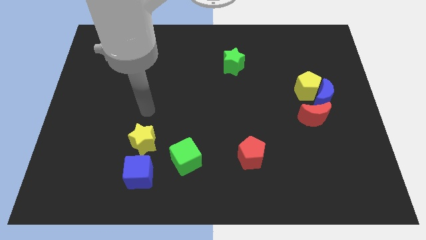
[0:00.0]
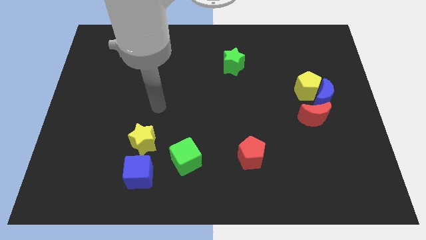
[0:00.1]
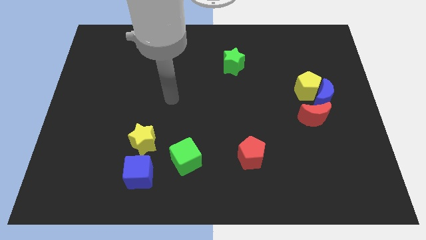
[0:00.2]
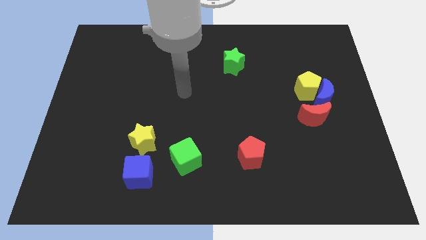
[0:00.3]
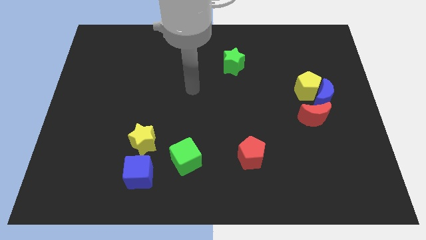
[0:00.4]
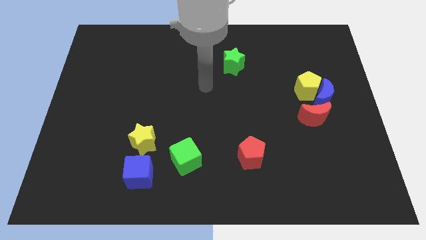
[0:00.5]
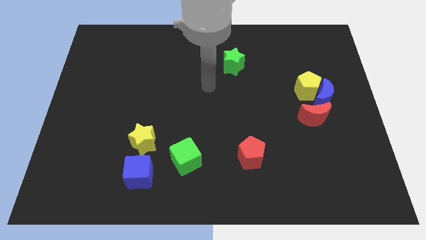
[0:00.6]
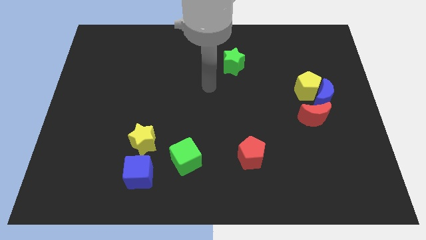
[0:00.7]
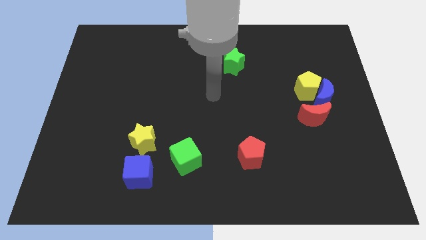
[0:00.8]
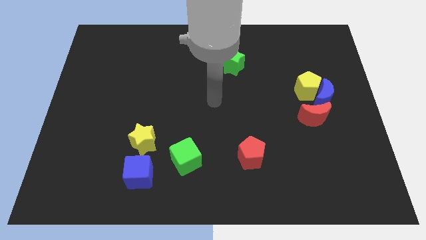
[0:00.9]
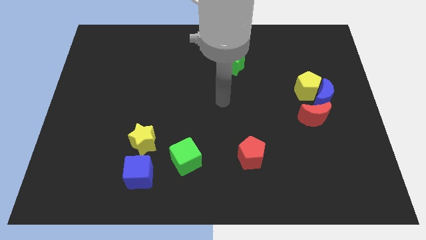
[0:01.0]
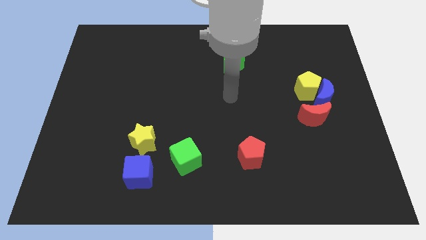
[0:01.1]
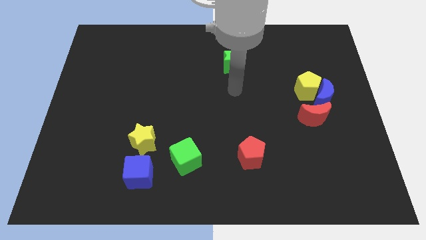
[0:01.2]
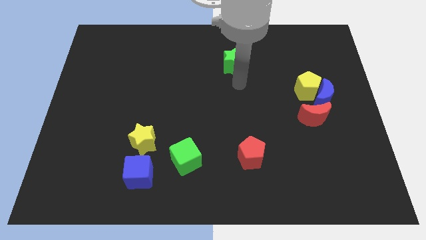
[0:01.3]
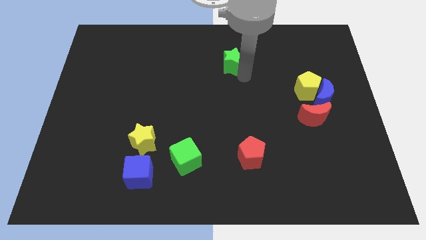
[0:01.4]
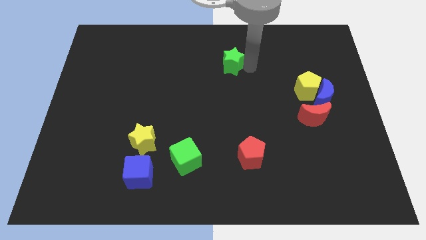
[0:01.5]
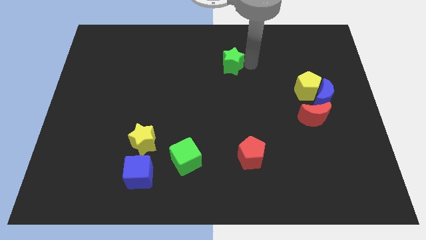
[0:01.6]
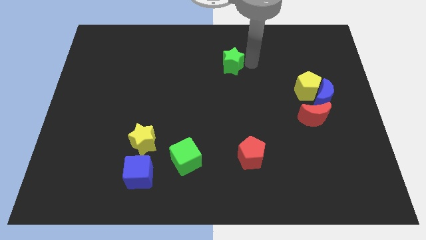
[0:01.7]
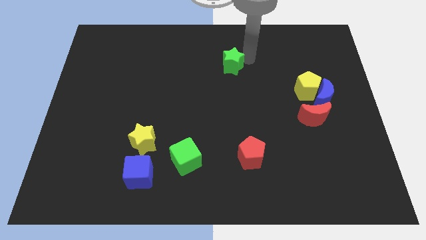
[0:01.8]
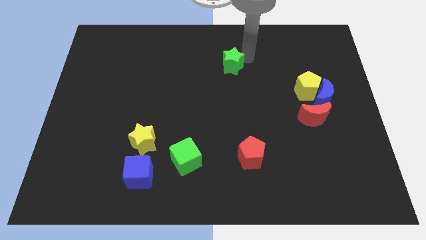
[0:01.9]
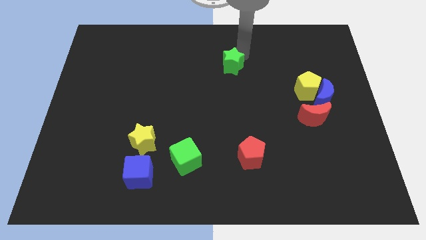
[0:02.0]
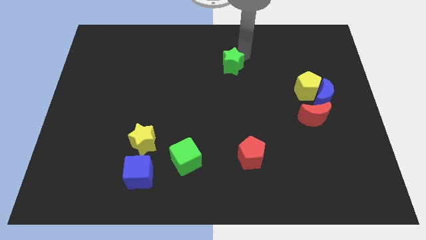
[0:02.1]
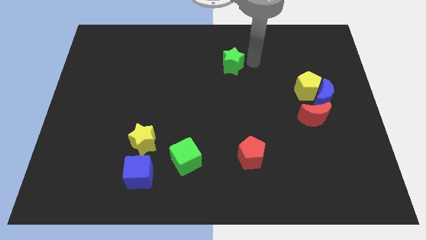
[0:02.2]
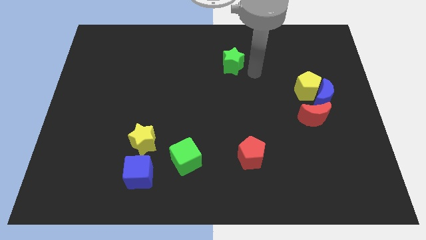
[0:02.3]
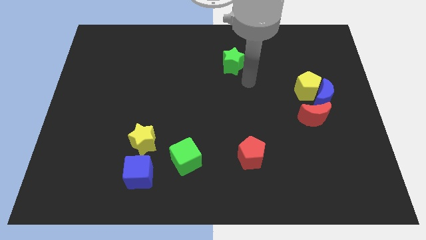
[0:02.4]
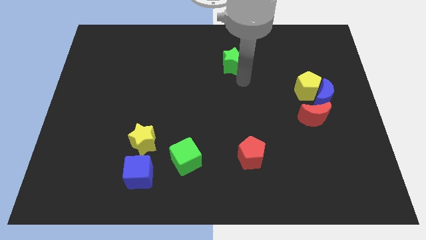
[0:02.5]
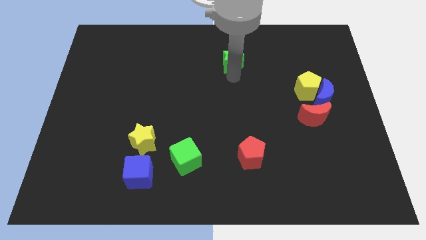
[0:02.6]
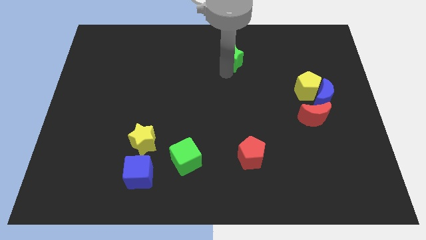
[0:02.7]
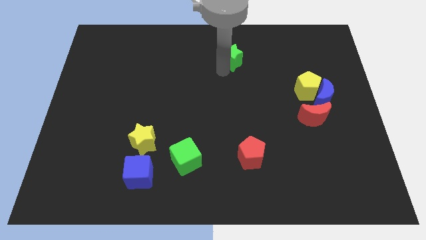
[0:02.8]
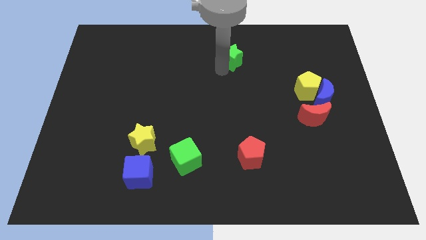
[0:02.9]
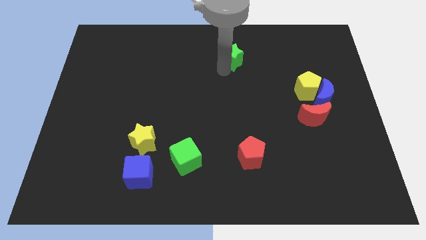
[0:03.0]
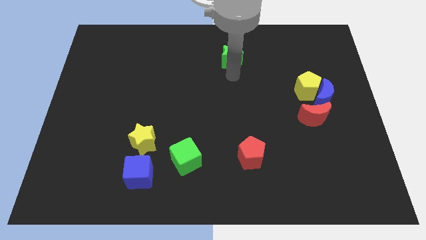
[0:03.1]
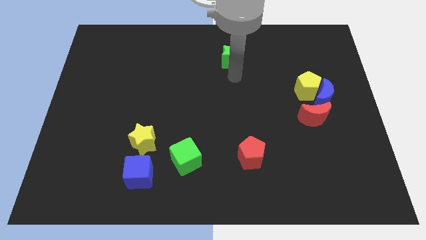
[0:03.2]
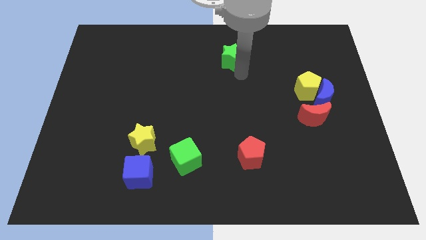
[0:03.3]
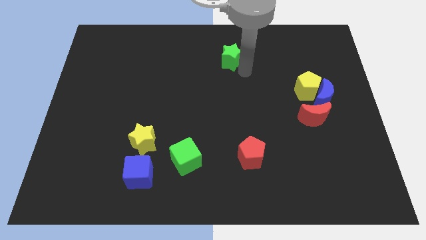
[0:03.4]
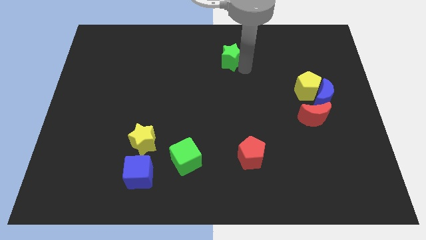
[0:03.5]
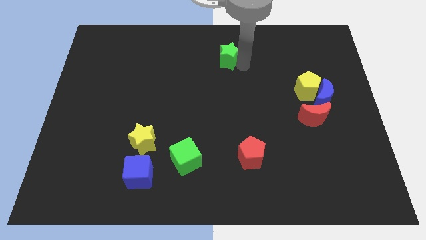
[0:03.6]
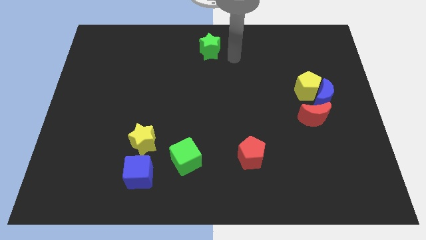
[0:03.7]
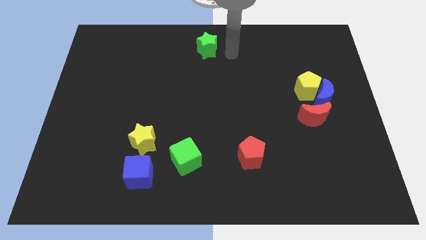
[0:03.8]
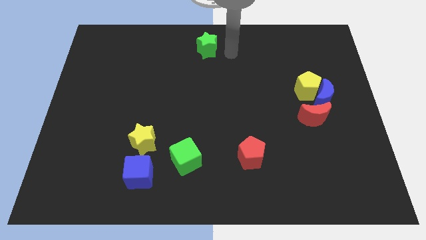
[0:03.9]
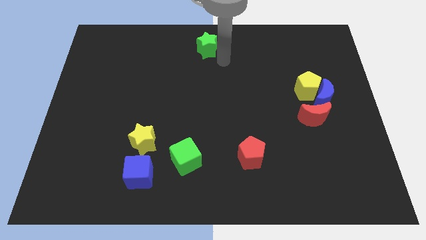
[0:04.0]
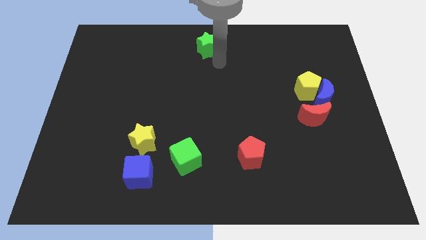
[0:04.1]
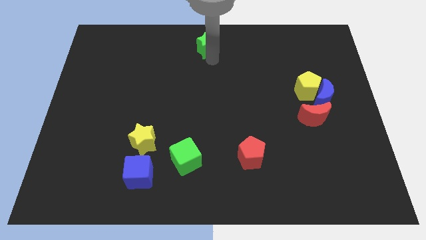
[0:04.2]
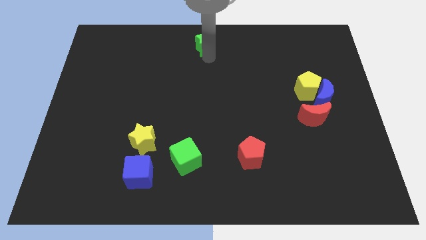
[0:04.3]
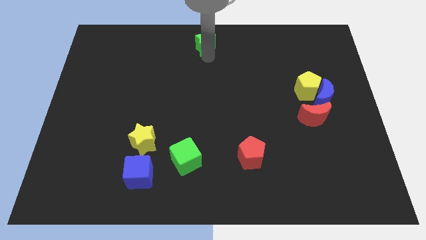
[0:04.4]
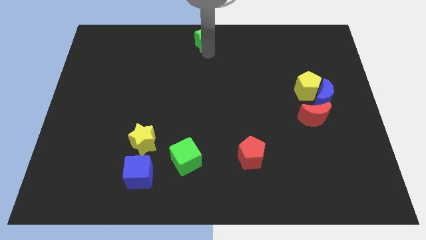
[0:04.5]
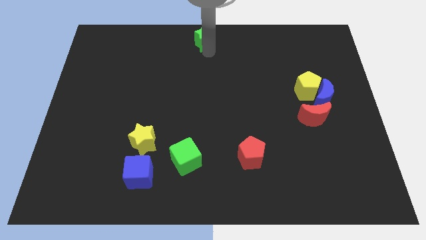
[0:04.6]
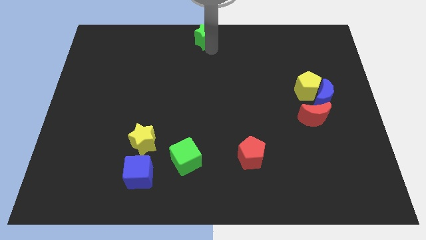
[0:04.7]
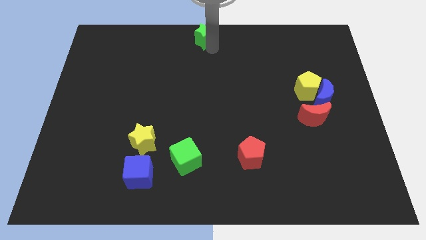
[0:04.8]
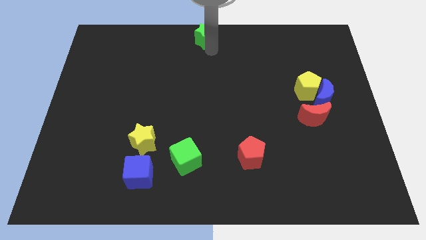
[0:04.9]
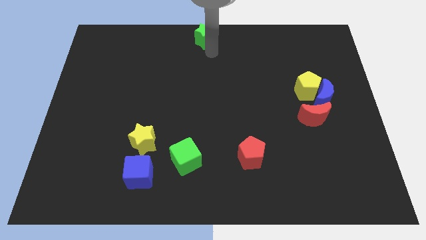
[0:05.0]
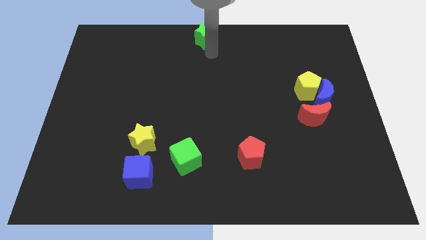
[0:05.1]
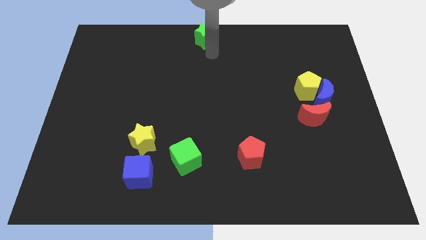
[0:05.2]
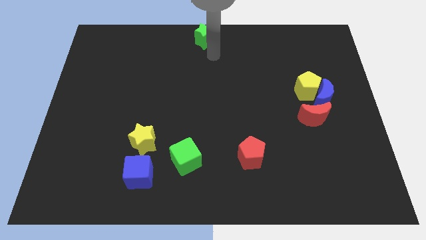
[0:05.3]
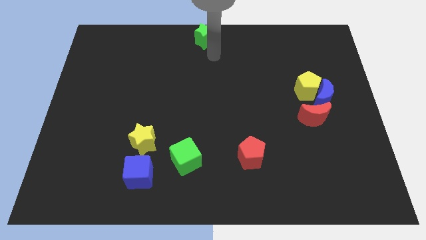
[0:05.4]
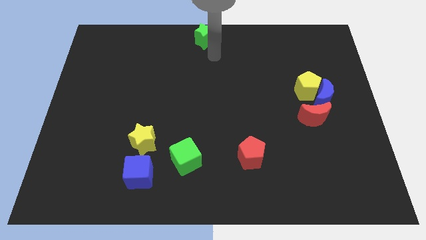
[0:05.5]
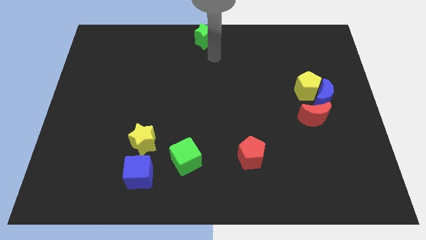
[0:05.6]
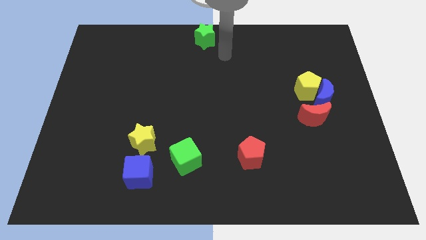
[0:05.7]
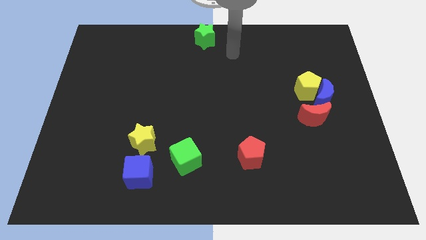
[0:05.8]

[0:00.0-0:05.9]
push the green star to the top center of the board

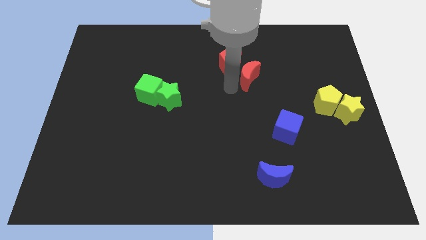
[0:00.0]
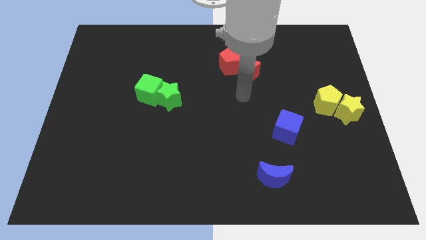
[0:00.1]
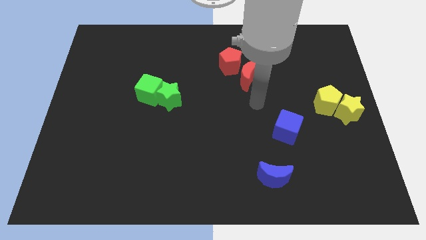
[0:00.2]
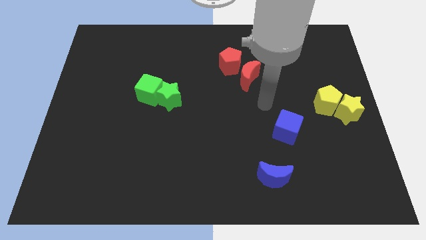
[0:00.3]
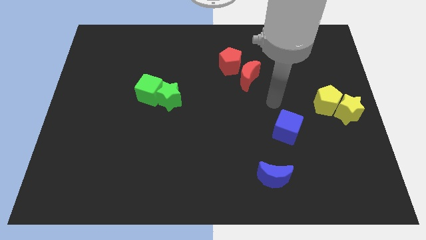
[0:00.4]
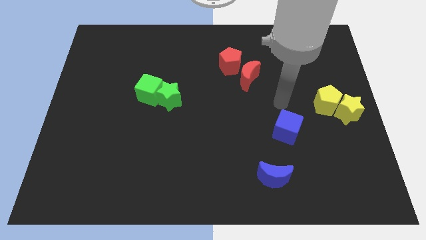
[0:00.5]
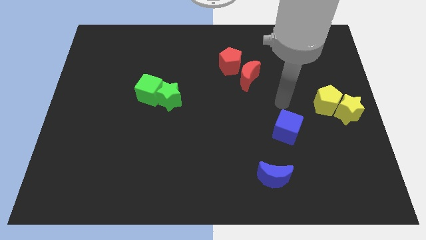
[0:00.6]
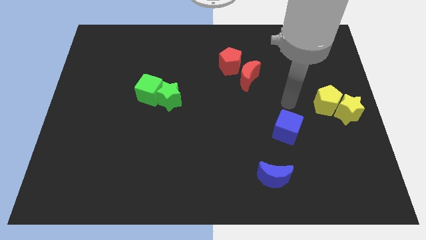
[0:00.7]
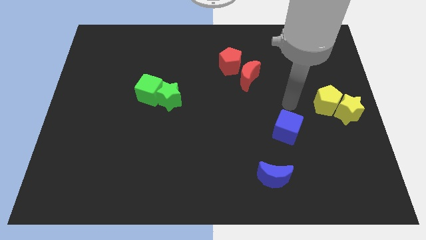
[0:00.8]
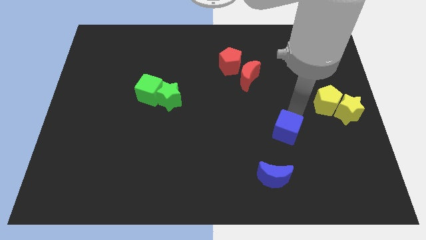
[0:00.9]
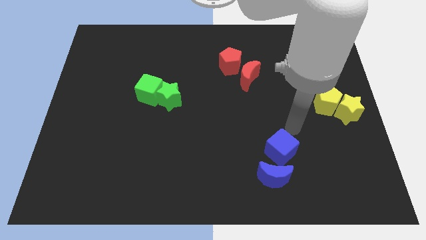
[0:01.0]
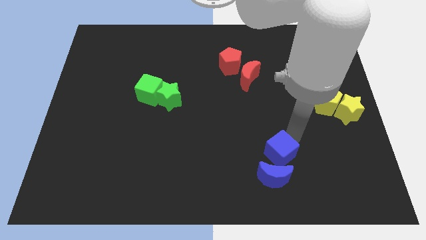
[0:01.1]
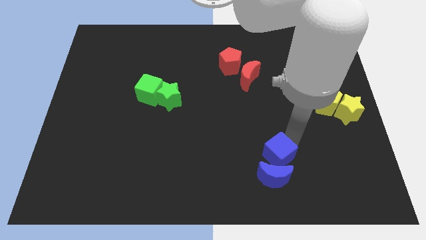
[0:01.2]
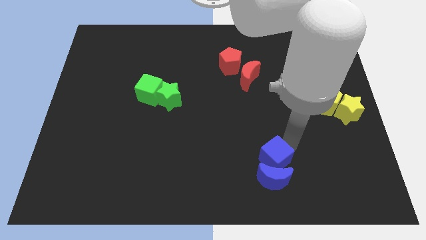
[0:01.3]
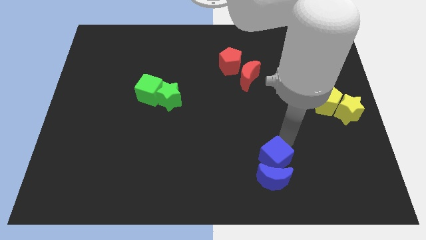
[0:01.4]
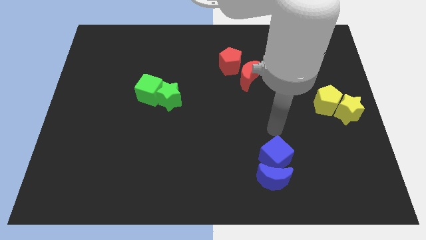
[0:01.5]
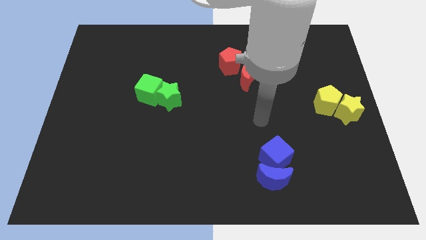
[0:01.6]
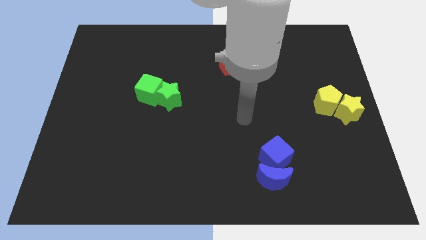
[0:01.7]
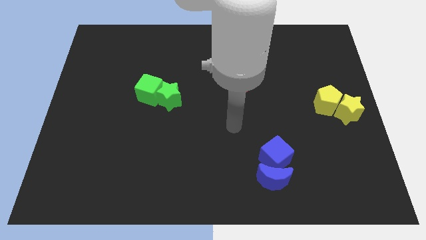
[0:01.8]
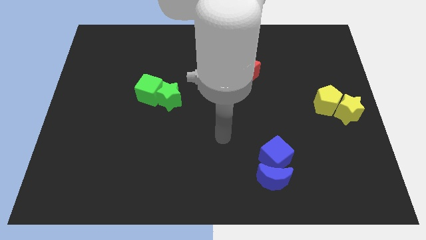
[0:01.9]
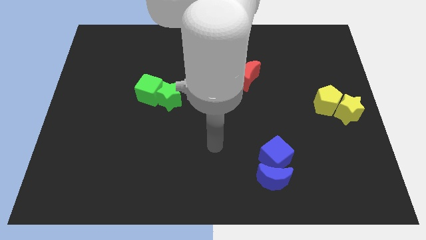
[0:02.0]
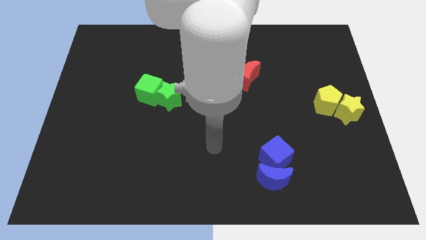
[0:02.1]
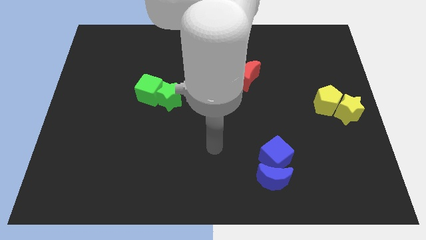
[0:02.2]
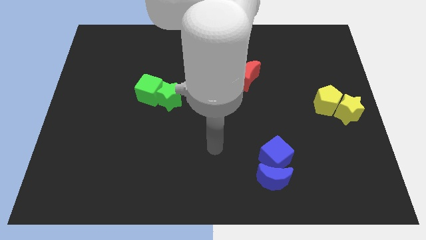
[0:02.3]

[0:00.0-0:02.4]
push the blue cube close to the blue crescent

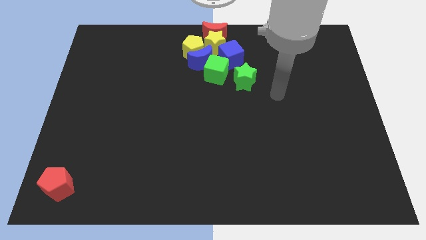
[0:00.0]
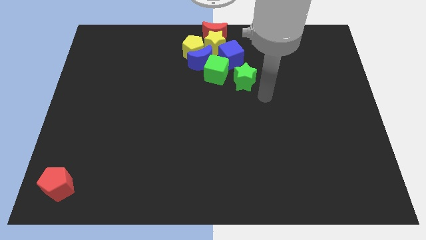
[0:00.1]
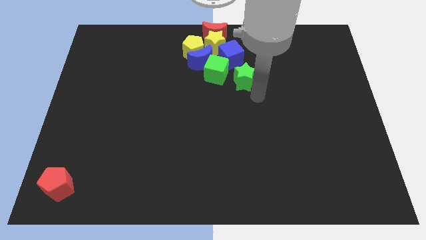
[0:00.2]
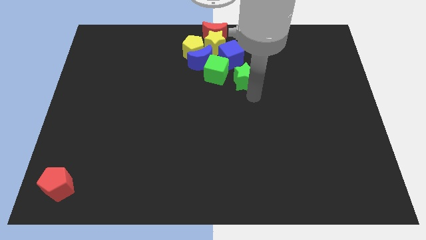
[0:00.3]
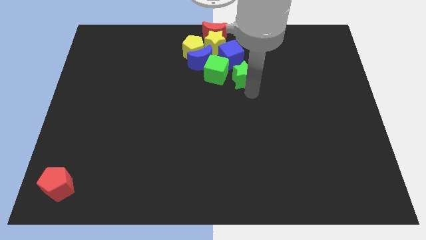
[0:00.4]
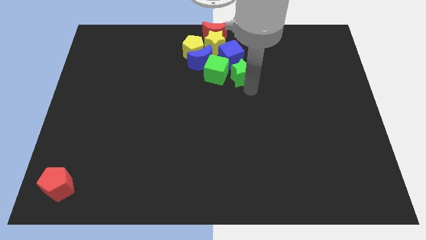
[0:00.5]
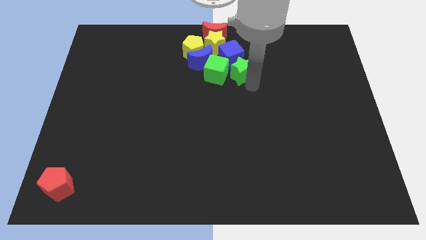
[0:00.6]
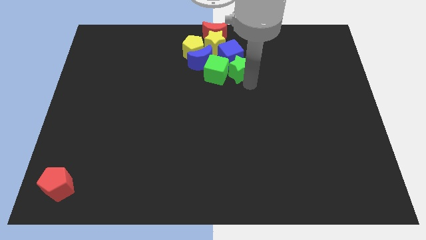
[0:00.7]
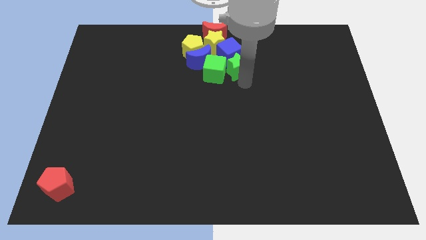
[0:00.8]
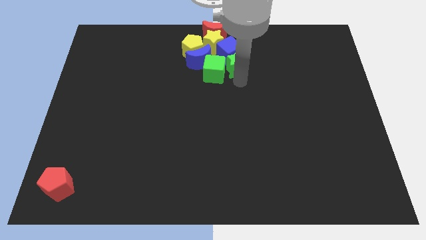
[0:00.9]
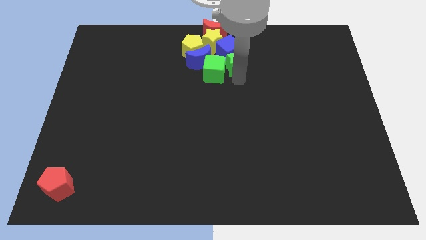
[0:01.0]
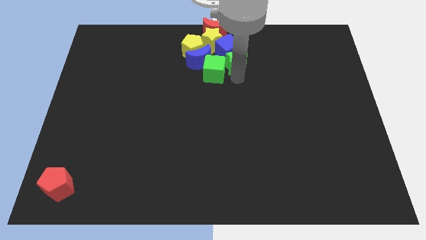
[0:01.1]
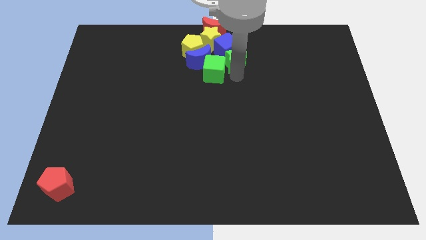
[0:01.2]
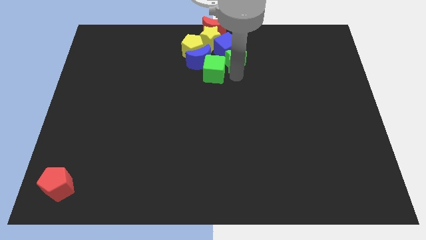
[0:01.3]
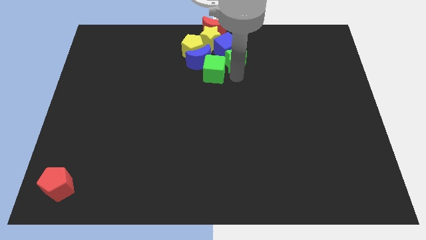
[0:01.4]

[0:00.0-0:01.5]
push the green star into the group of blocks
